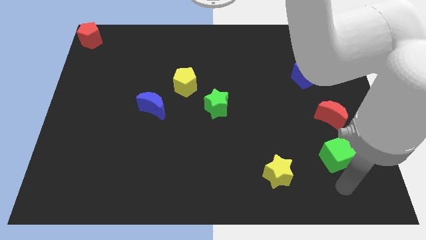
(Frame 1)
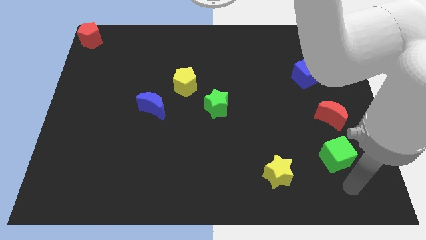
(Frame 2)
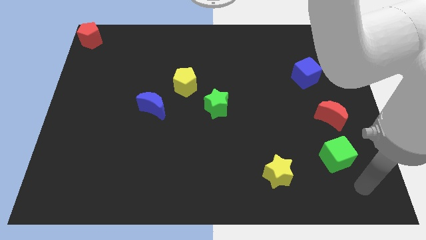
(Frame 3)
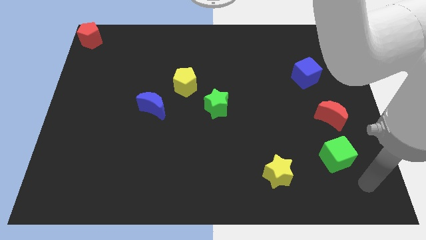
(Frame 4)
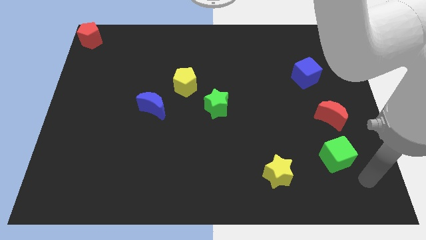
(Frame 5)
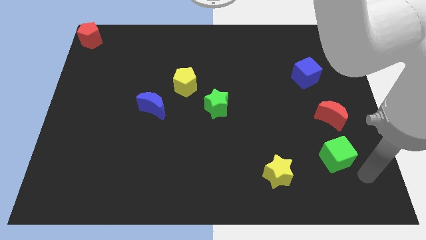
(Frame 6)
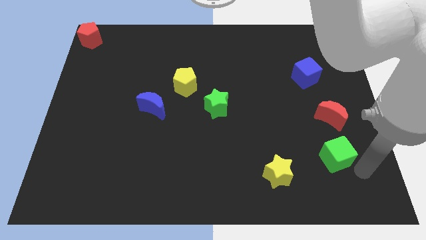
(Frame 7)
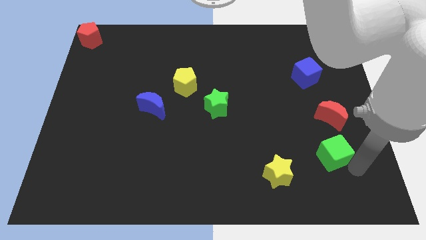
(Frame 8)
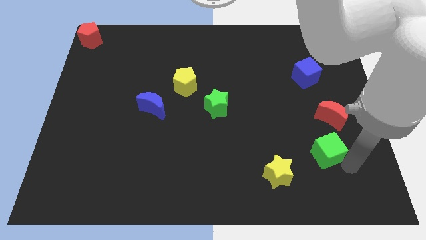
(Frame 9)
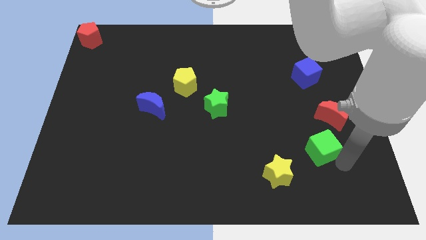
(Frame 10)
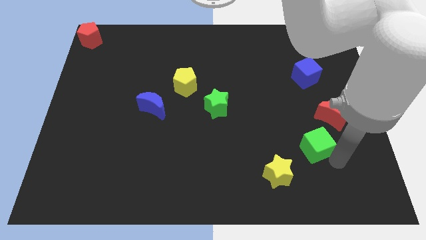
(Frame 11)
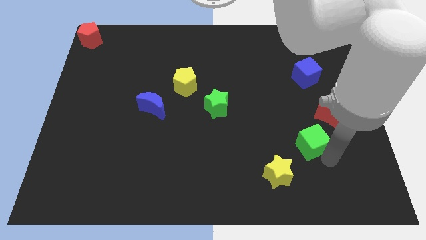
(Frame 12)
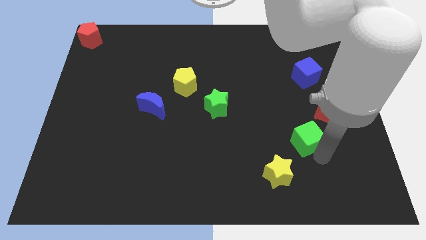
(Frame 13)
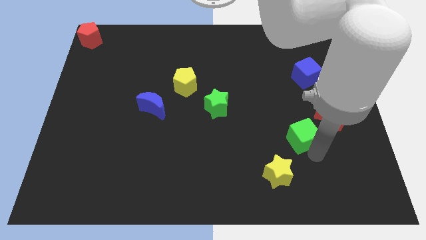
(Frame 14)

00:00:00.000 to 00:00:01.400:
push the green cube between the yellow star and red crescent

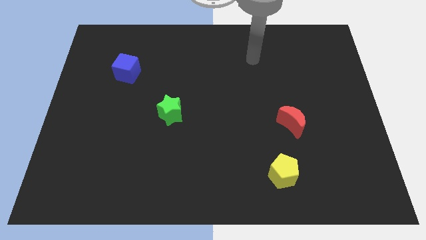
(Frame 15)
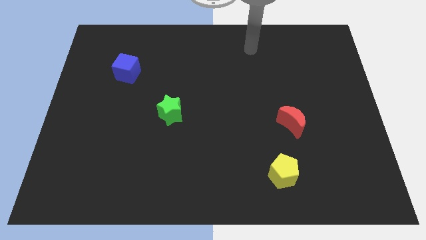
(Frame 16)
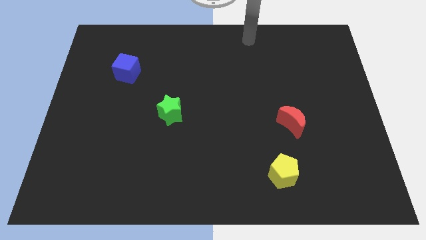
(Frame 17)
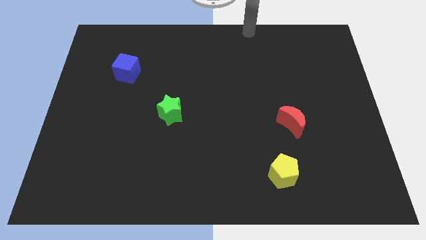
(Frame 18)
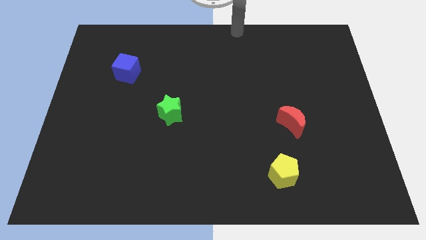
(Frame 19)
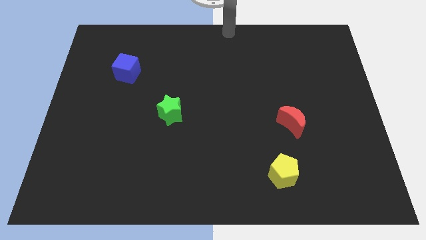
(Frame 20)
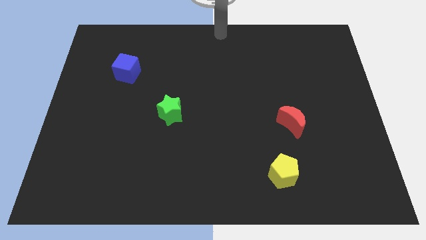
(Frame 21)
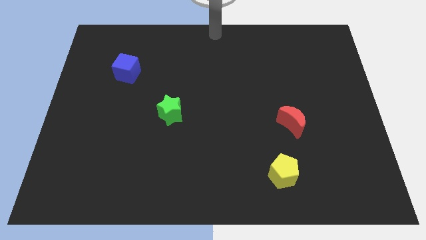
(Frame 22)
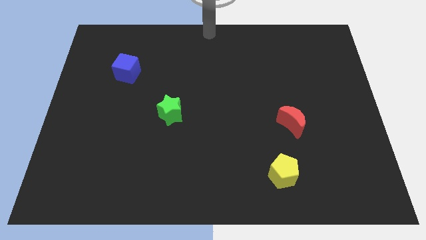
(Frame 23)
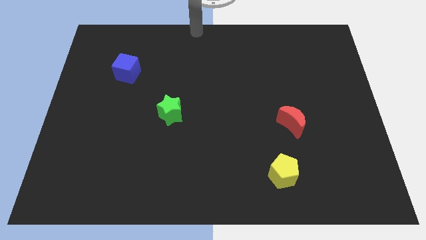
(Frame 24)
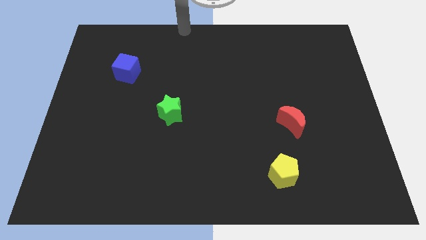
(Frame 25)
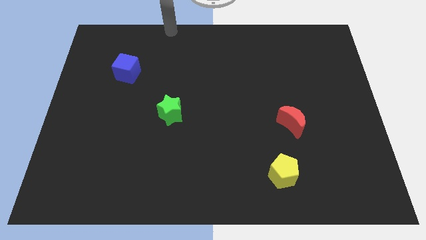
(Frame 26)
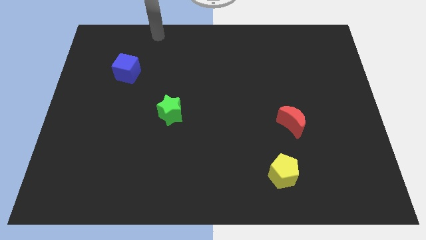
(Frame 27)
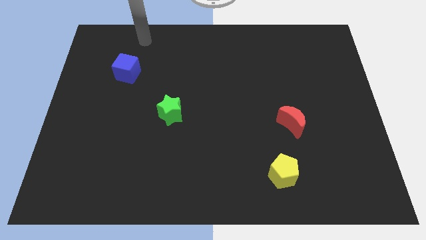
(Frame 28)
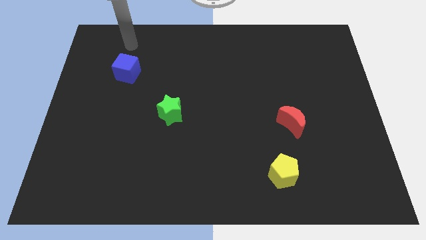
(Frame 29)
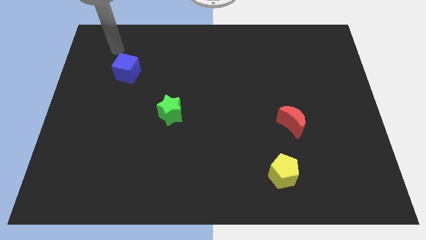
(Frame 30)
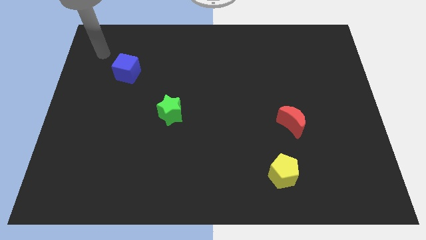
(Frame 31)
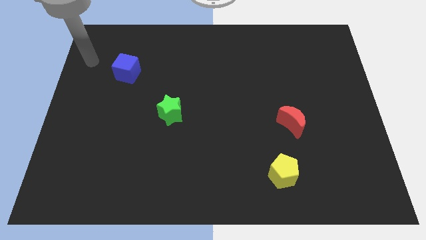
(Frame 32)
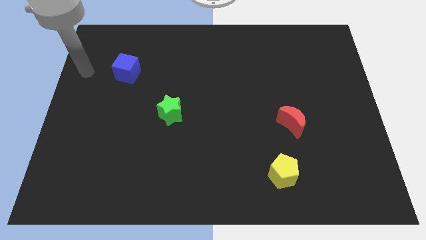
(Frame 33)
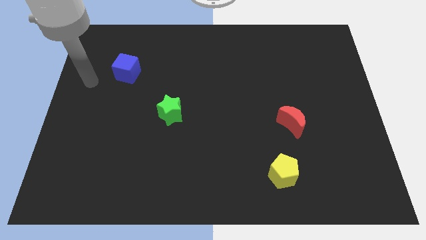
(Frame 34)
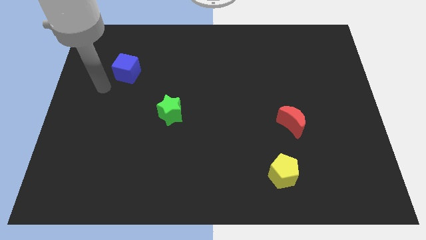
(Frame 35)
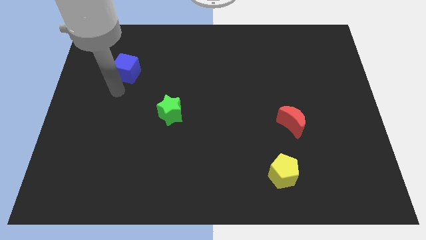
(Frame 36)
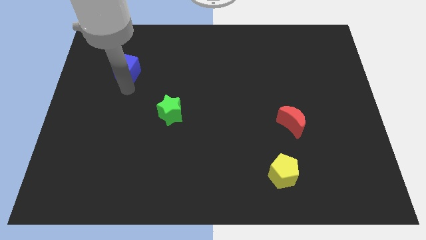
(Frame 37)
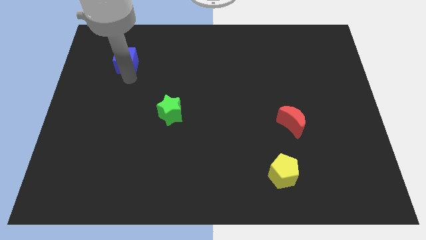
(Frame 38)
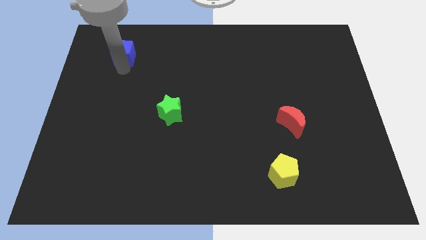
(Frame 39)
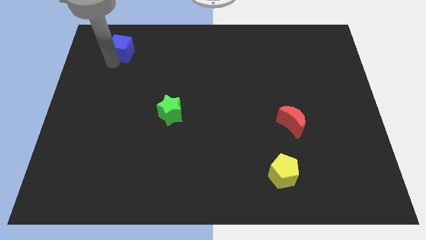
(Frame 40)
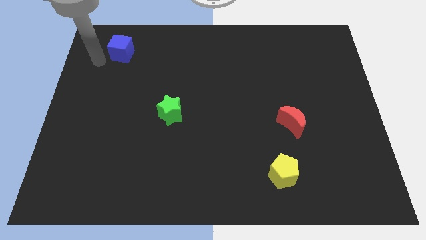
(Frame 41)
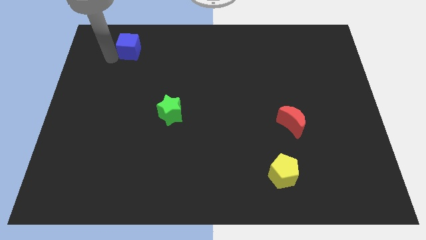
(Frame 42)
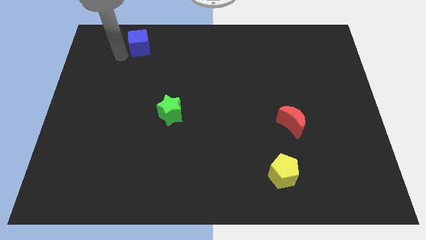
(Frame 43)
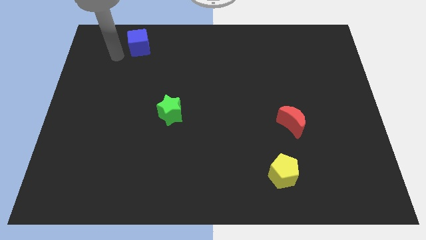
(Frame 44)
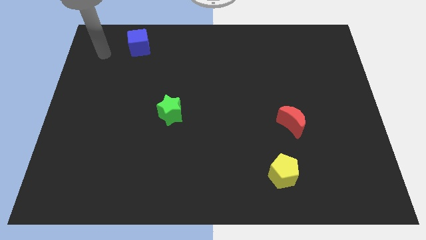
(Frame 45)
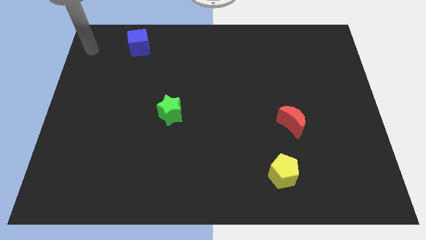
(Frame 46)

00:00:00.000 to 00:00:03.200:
go and push the blue cube towards the top left of the board

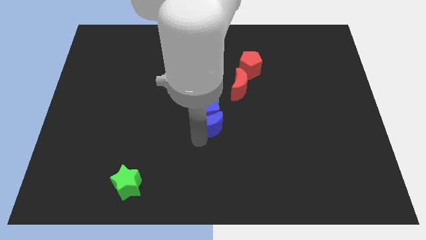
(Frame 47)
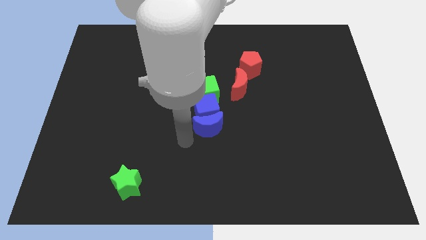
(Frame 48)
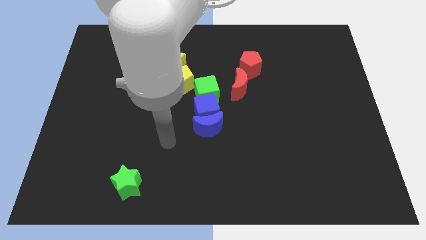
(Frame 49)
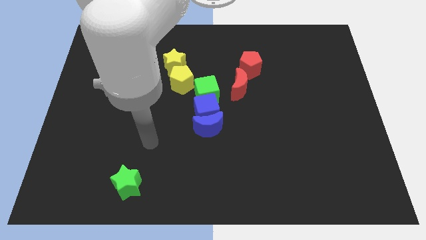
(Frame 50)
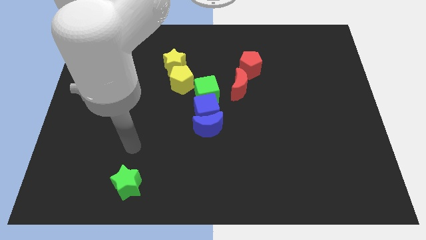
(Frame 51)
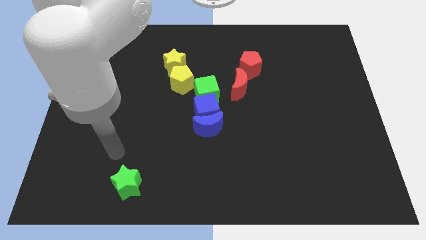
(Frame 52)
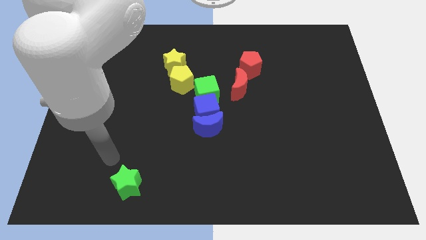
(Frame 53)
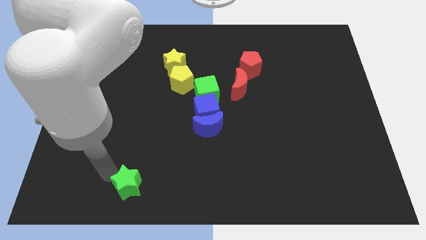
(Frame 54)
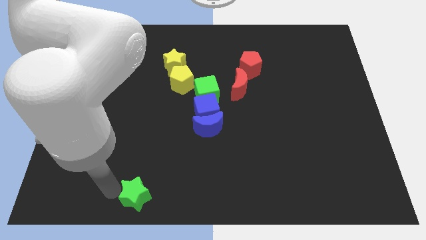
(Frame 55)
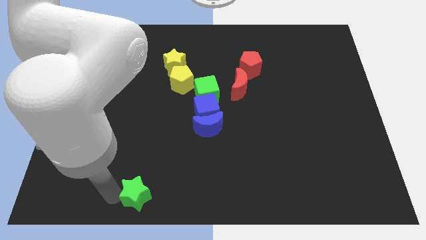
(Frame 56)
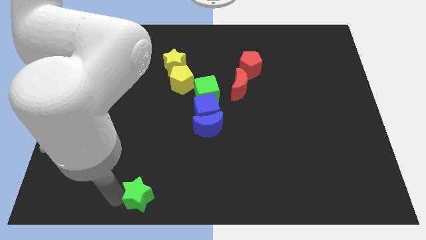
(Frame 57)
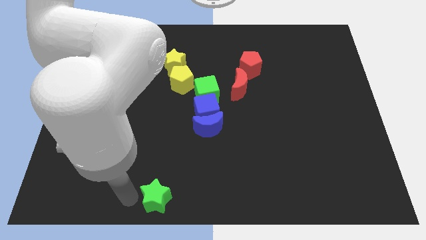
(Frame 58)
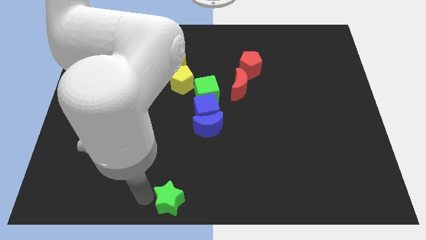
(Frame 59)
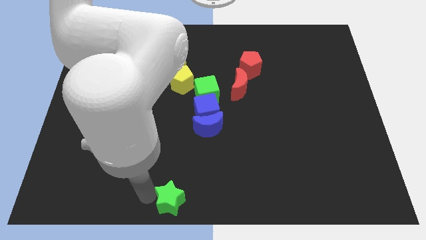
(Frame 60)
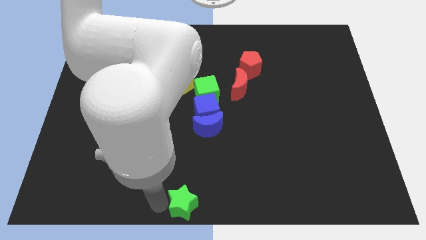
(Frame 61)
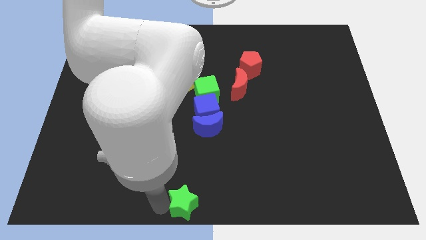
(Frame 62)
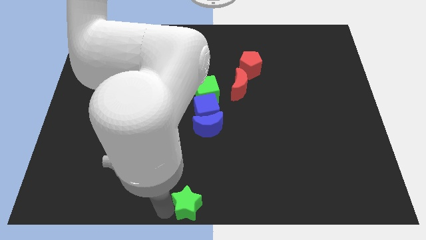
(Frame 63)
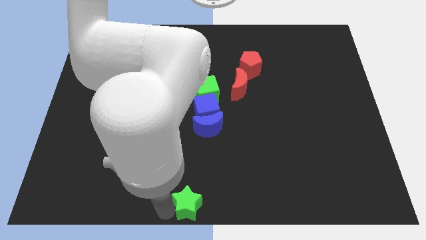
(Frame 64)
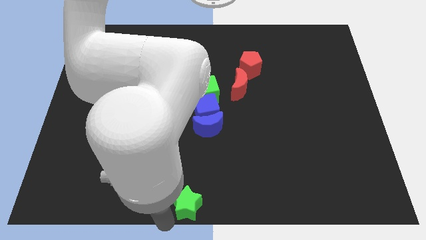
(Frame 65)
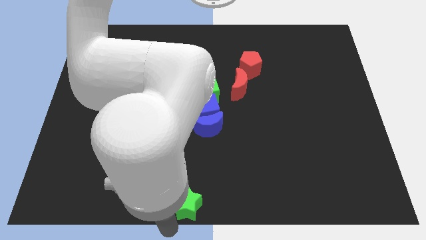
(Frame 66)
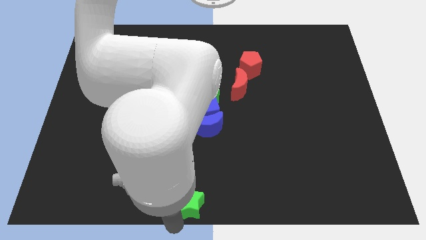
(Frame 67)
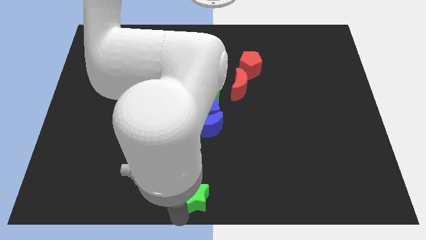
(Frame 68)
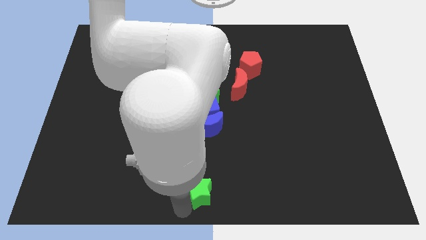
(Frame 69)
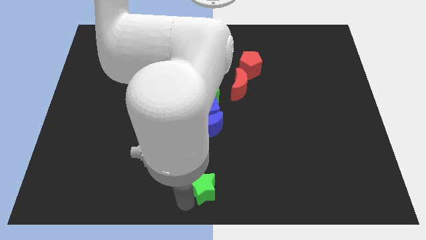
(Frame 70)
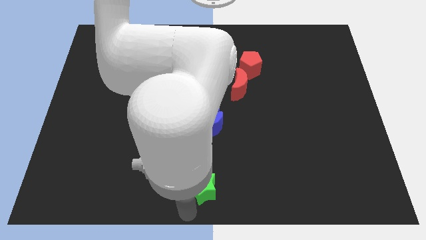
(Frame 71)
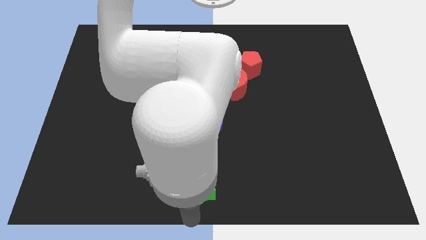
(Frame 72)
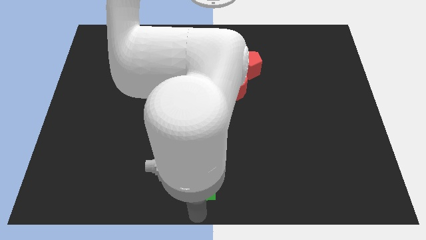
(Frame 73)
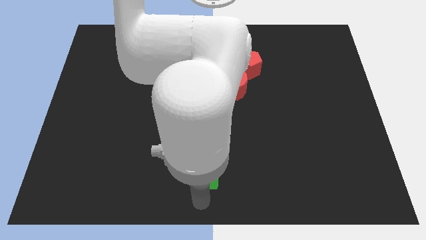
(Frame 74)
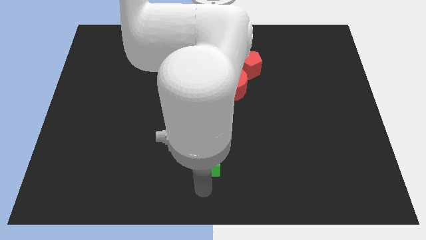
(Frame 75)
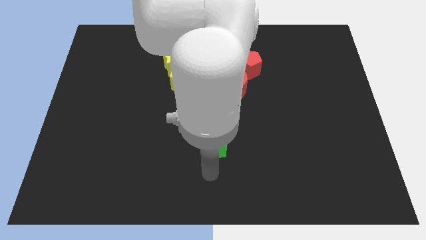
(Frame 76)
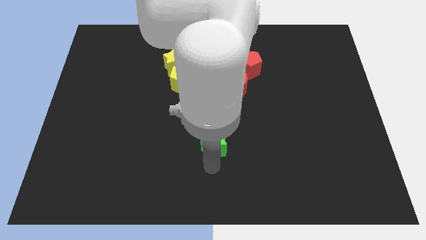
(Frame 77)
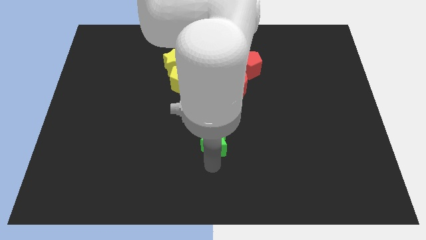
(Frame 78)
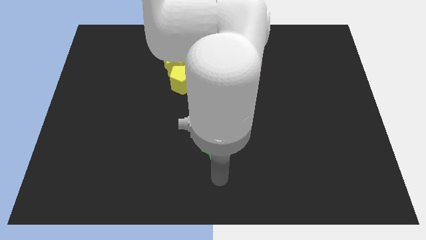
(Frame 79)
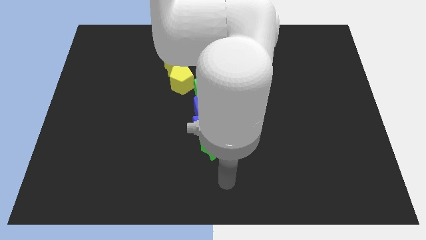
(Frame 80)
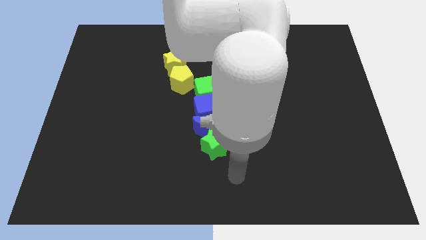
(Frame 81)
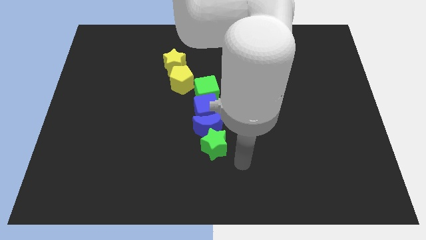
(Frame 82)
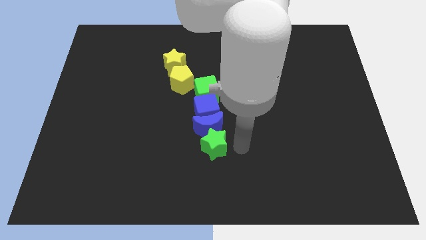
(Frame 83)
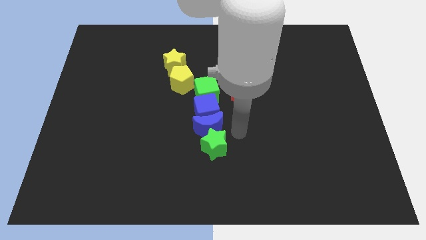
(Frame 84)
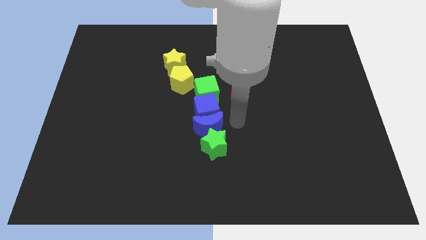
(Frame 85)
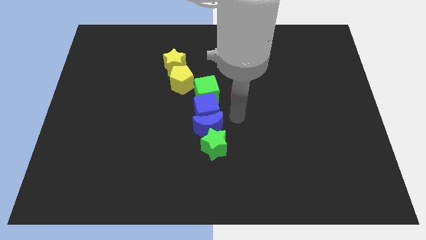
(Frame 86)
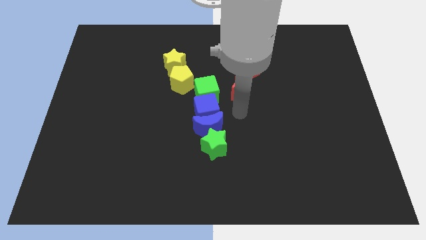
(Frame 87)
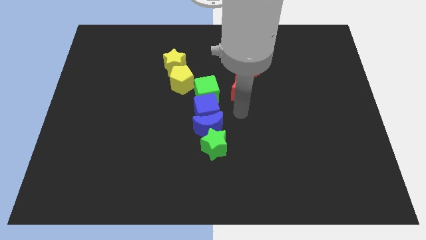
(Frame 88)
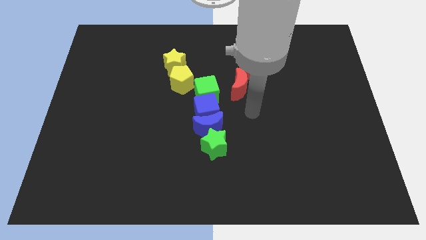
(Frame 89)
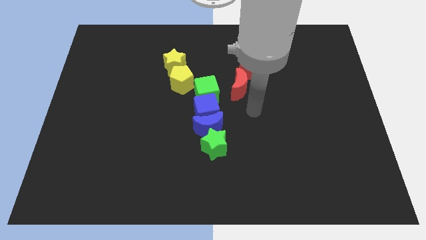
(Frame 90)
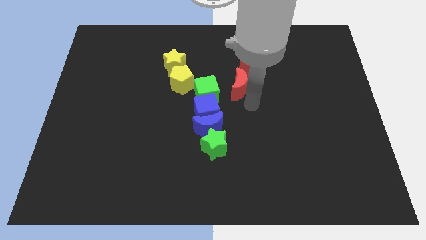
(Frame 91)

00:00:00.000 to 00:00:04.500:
place the green star into the blue moon
